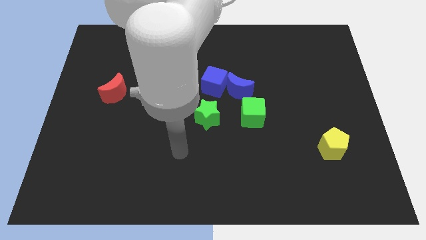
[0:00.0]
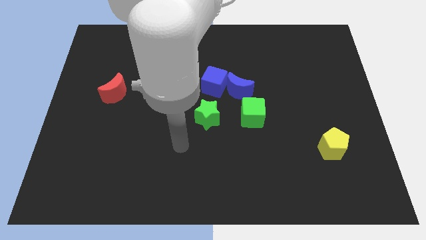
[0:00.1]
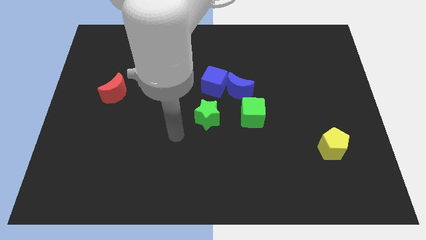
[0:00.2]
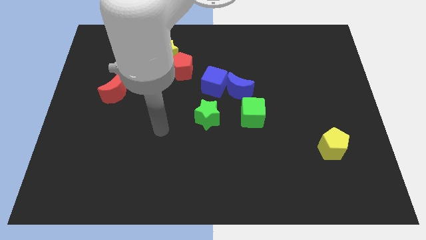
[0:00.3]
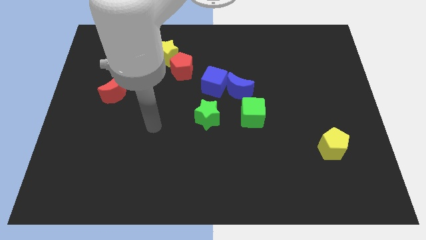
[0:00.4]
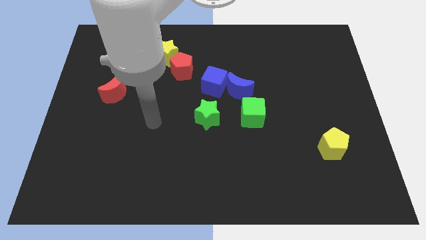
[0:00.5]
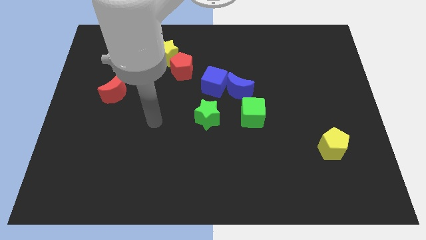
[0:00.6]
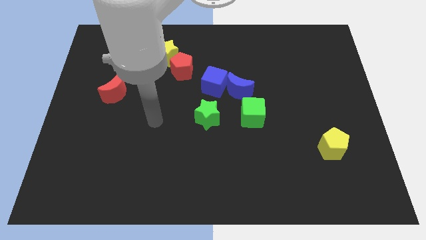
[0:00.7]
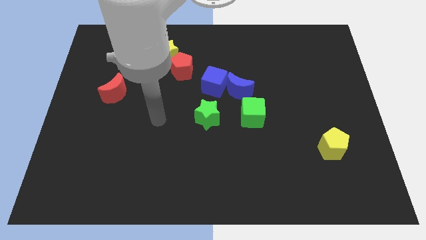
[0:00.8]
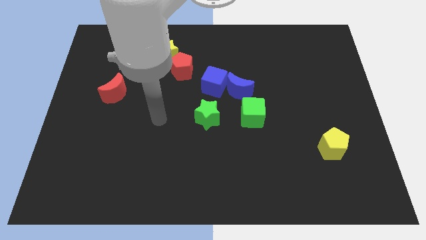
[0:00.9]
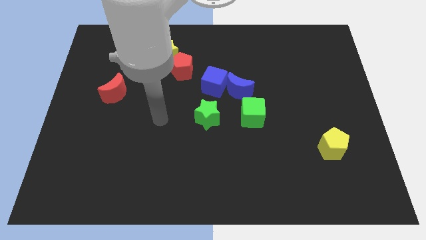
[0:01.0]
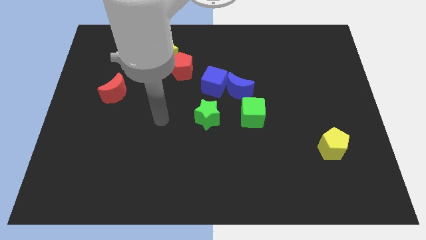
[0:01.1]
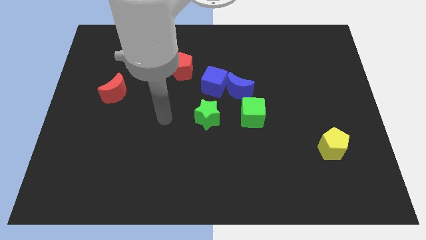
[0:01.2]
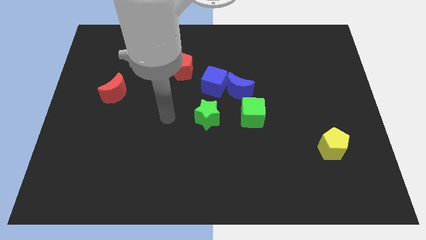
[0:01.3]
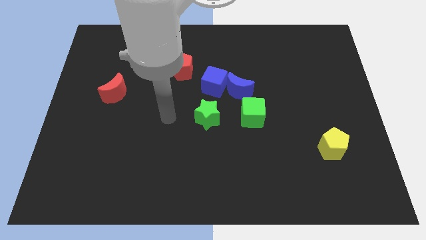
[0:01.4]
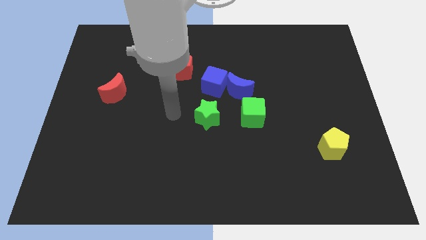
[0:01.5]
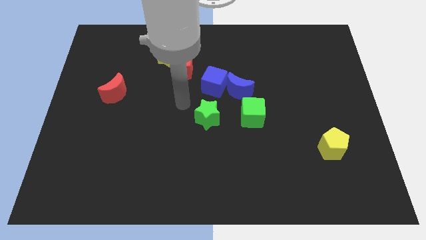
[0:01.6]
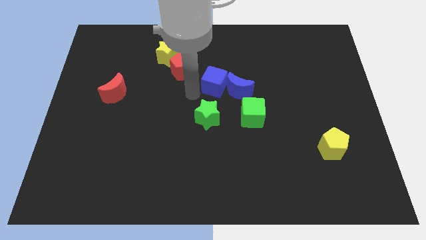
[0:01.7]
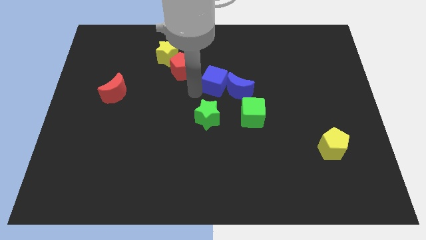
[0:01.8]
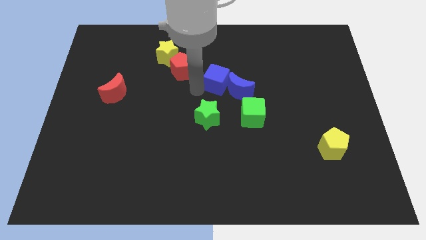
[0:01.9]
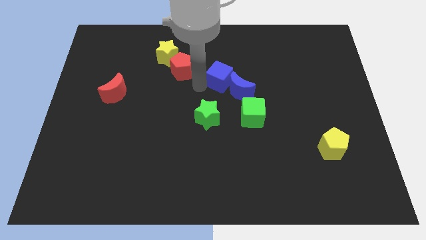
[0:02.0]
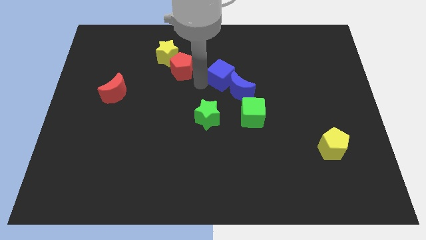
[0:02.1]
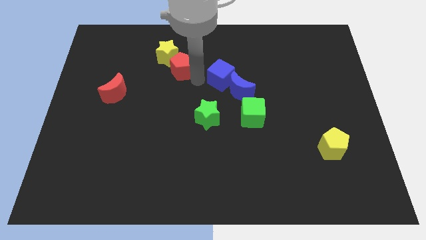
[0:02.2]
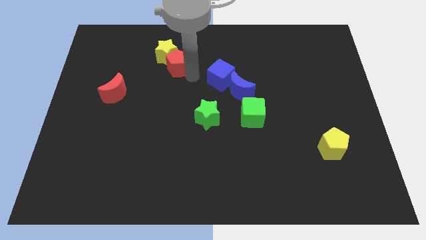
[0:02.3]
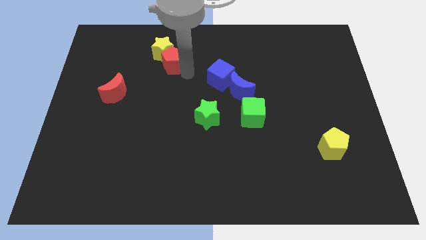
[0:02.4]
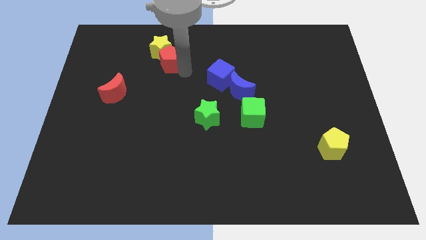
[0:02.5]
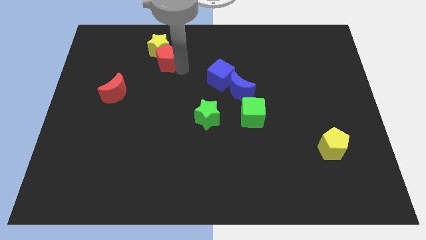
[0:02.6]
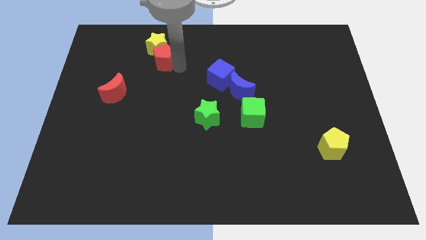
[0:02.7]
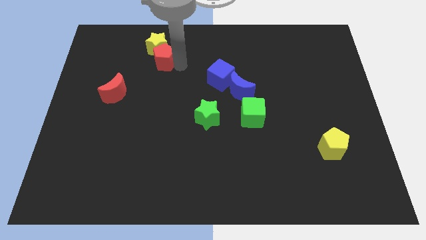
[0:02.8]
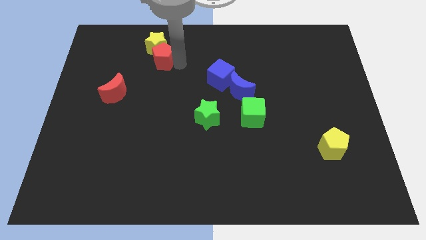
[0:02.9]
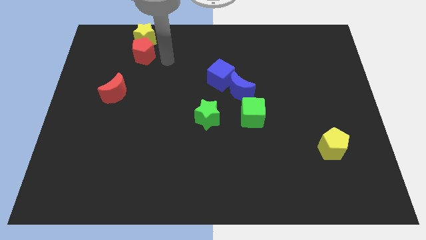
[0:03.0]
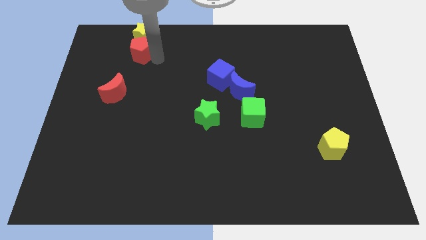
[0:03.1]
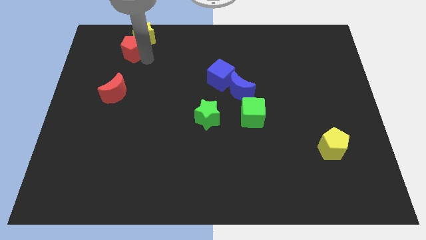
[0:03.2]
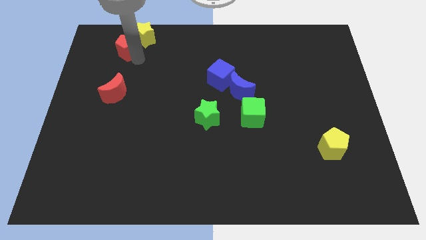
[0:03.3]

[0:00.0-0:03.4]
place the red pentagon above the red crescent

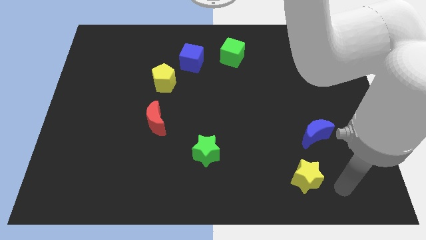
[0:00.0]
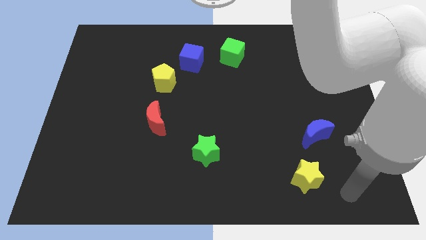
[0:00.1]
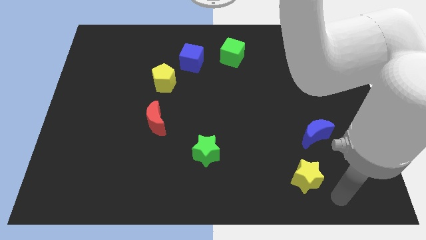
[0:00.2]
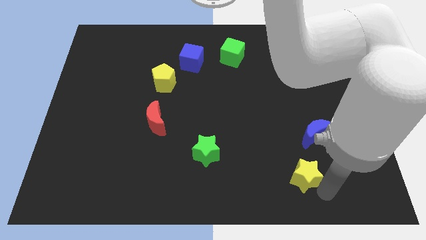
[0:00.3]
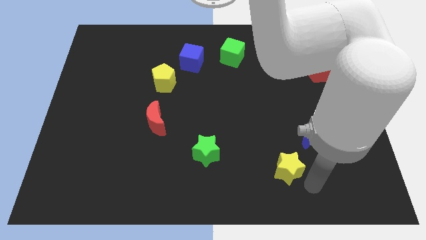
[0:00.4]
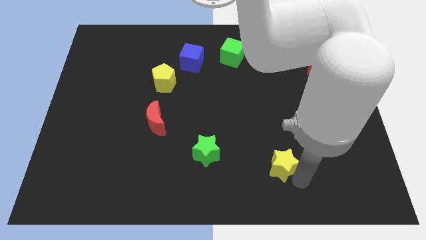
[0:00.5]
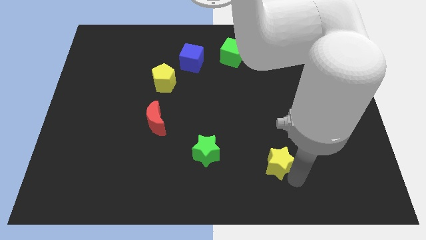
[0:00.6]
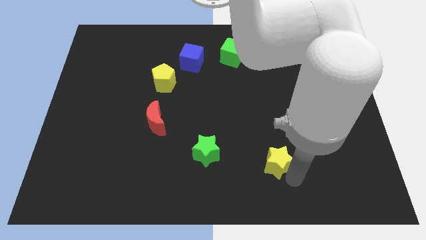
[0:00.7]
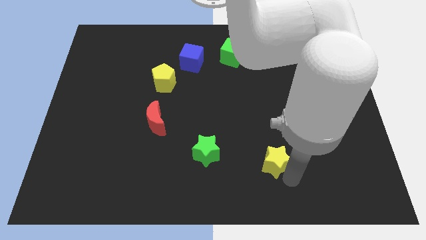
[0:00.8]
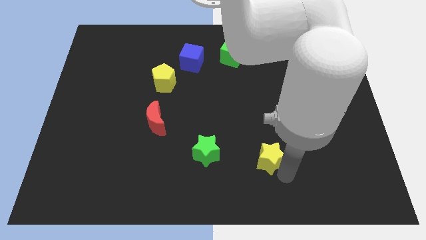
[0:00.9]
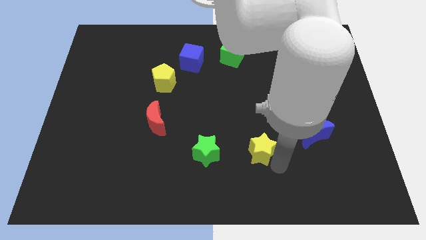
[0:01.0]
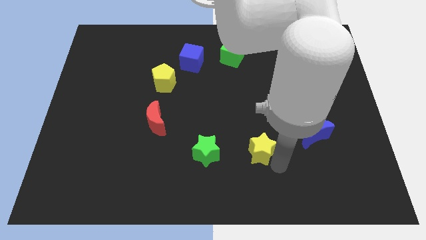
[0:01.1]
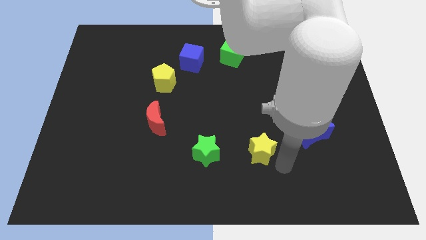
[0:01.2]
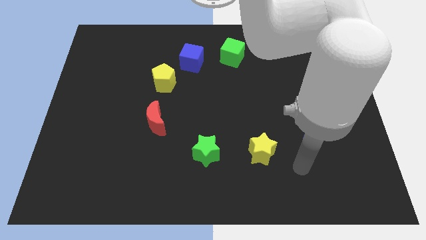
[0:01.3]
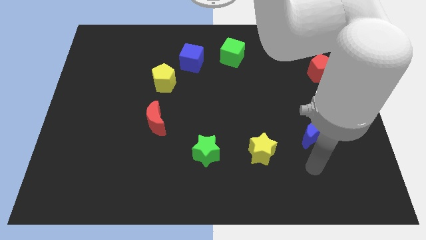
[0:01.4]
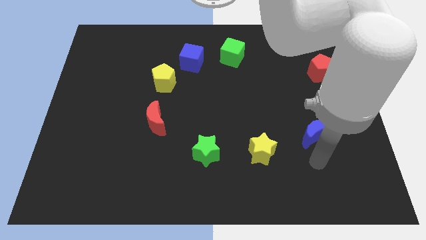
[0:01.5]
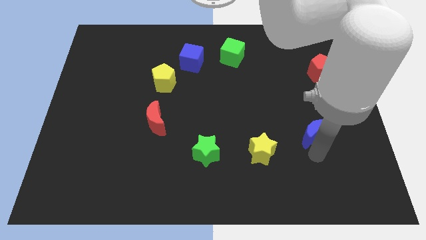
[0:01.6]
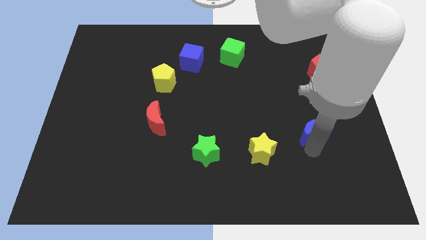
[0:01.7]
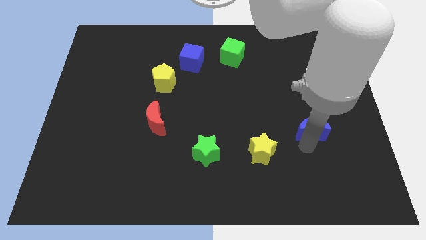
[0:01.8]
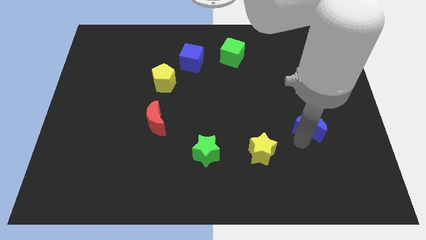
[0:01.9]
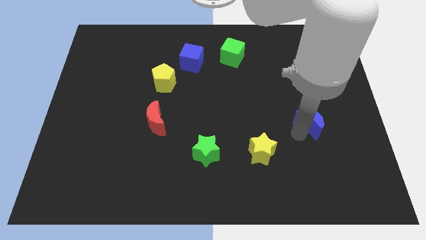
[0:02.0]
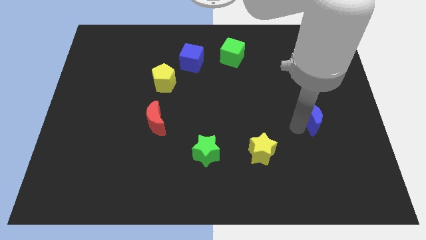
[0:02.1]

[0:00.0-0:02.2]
move the yellow star horizontally at the right side of green star

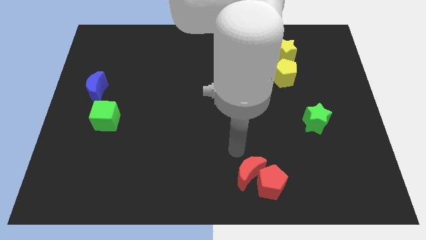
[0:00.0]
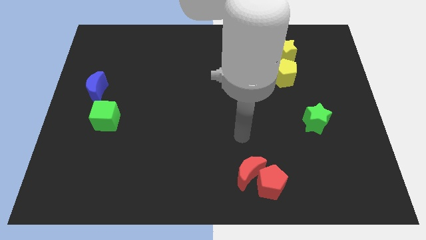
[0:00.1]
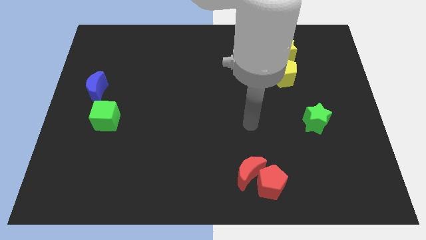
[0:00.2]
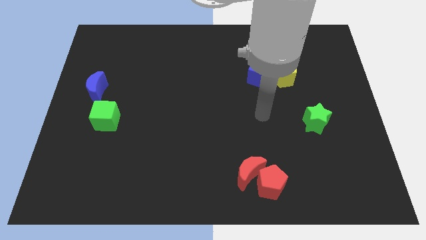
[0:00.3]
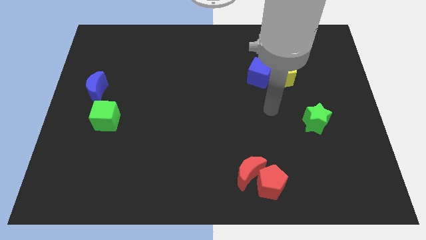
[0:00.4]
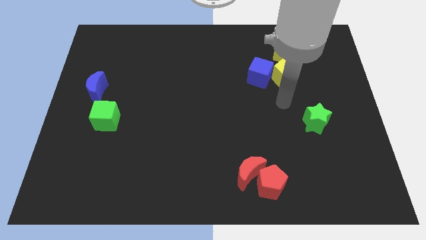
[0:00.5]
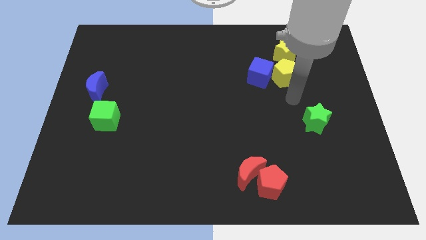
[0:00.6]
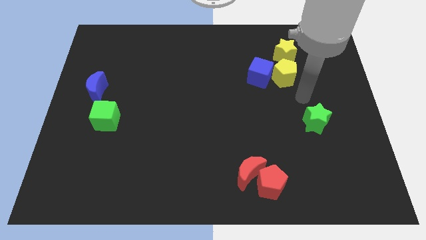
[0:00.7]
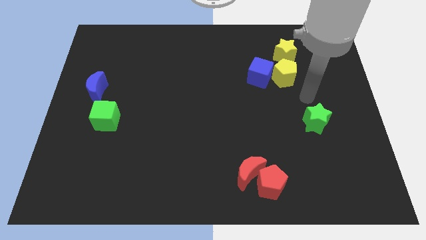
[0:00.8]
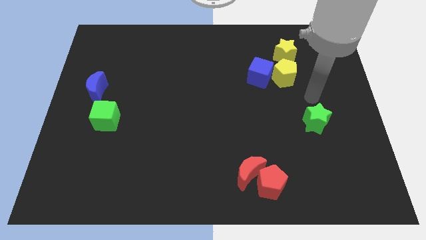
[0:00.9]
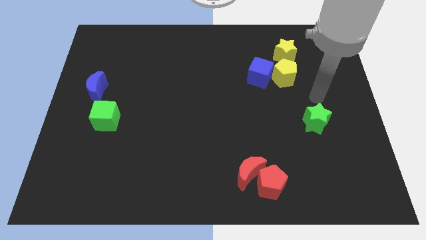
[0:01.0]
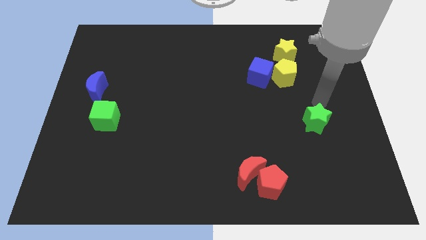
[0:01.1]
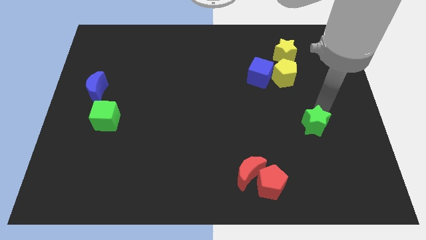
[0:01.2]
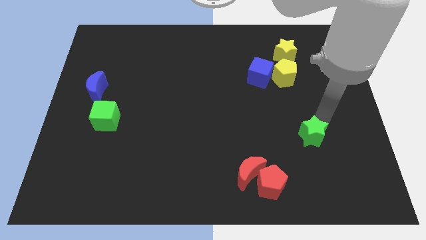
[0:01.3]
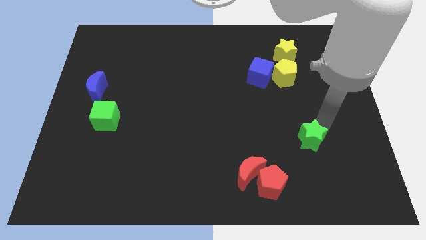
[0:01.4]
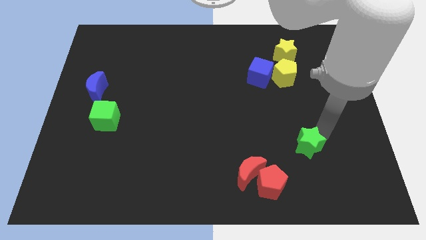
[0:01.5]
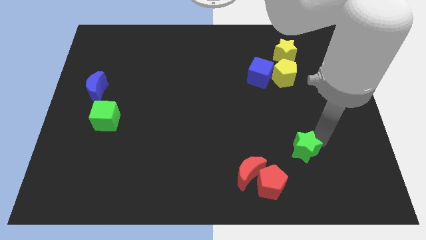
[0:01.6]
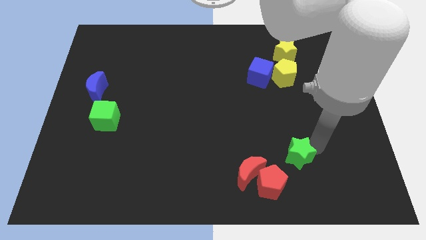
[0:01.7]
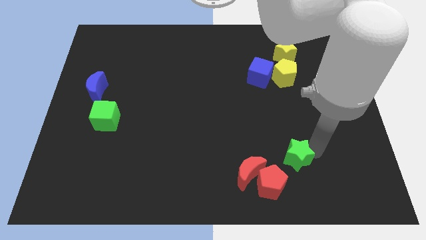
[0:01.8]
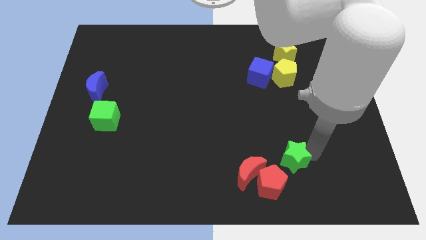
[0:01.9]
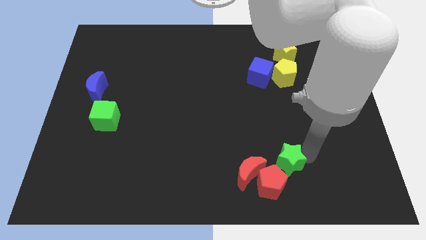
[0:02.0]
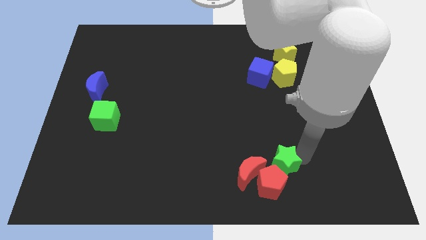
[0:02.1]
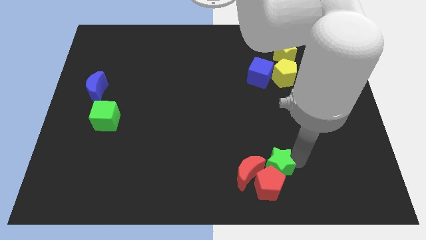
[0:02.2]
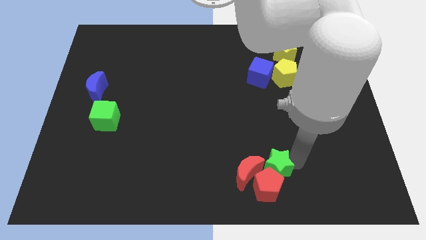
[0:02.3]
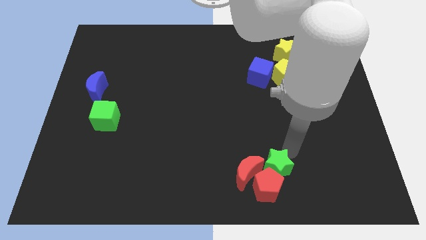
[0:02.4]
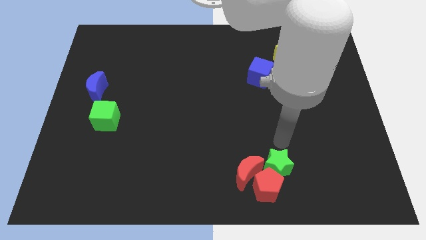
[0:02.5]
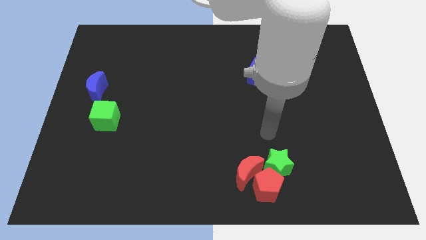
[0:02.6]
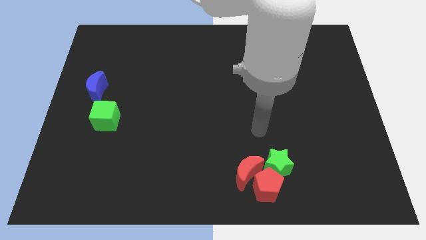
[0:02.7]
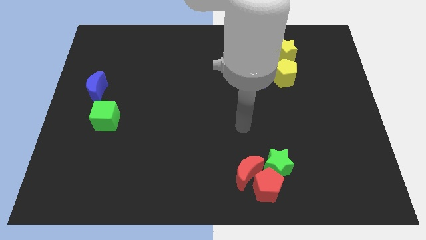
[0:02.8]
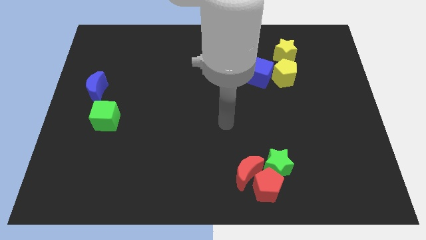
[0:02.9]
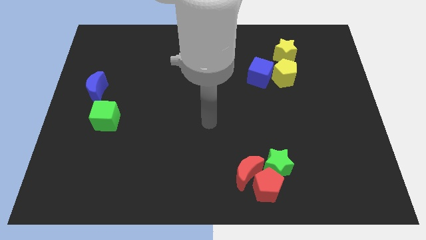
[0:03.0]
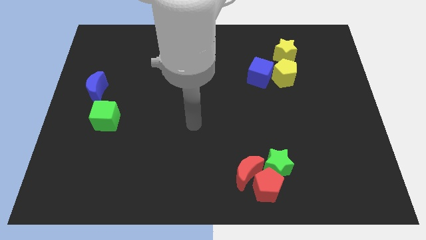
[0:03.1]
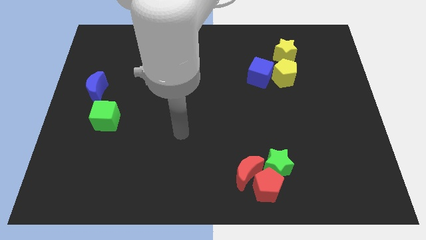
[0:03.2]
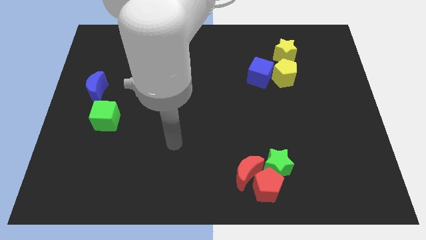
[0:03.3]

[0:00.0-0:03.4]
push the green star into the red blocks

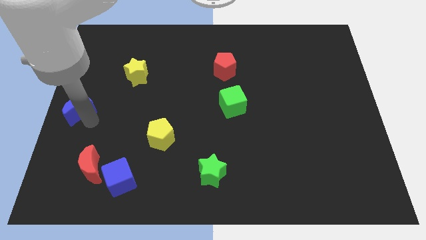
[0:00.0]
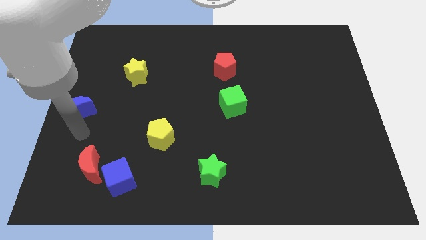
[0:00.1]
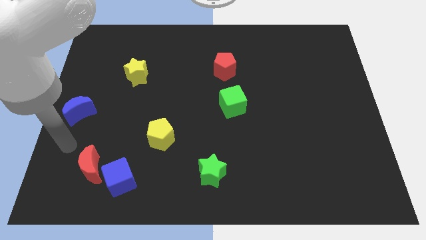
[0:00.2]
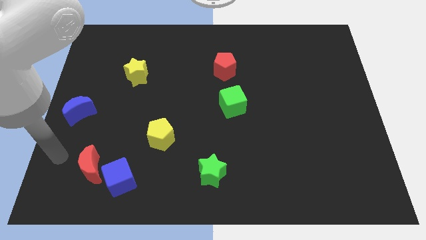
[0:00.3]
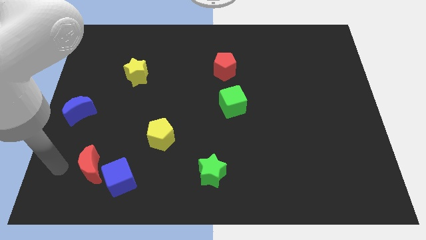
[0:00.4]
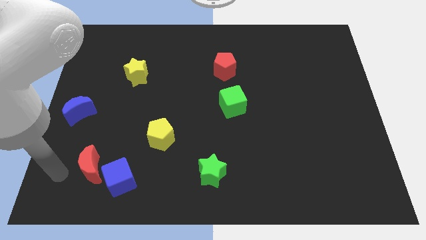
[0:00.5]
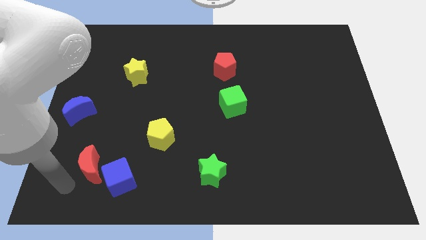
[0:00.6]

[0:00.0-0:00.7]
point your arm at the left of the red crescent
